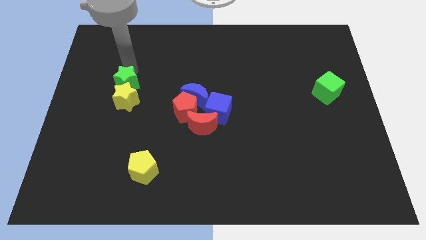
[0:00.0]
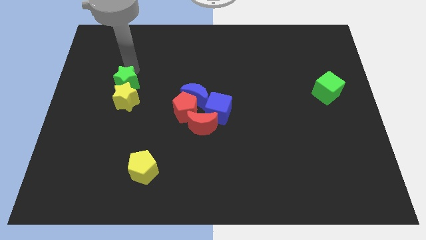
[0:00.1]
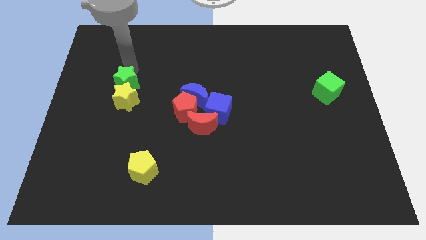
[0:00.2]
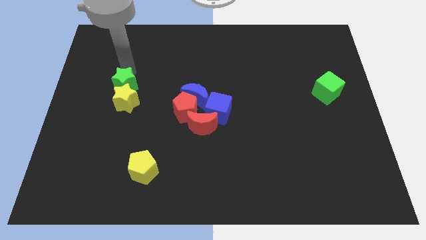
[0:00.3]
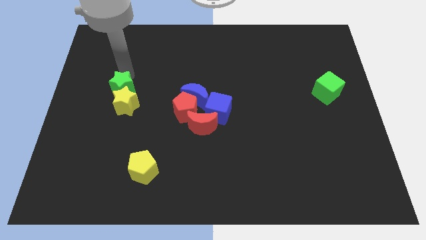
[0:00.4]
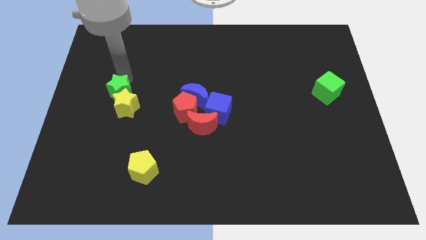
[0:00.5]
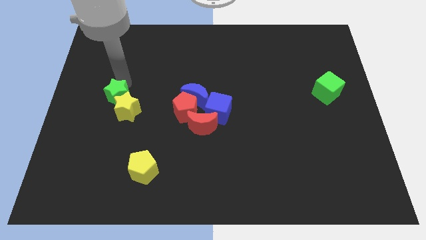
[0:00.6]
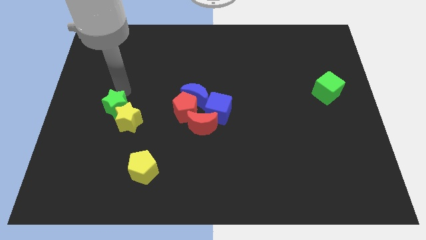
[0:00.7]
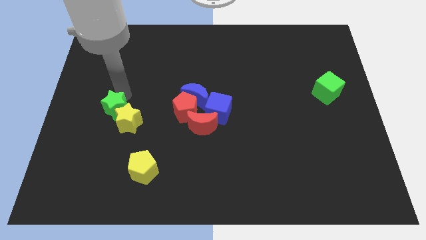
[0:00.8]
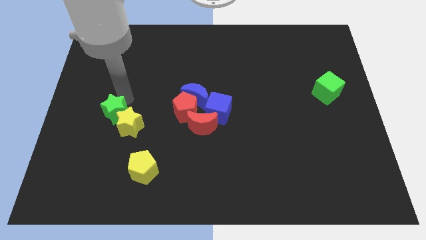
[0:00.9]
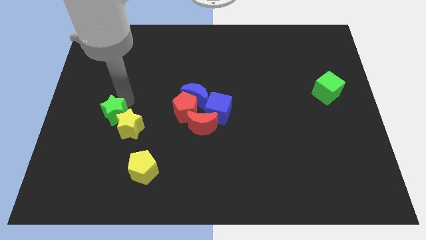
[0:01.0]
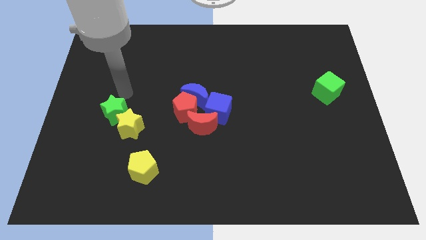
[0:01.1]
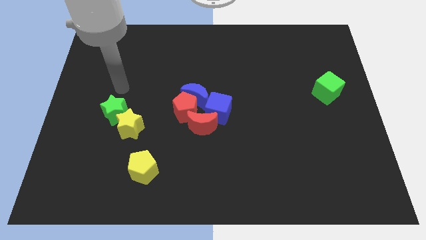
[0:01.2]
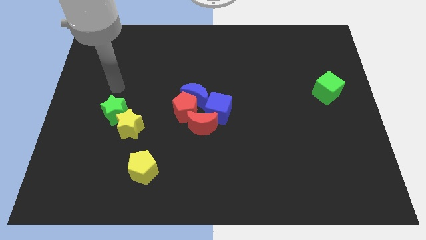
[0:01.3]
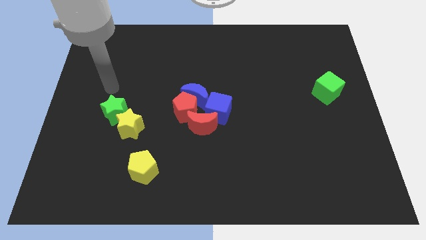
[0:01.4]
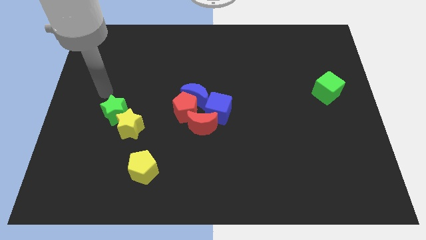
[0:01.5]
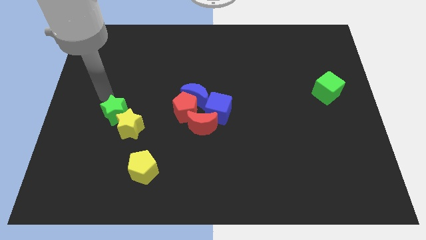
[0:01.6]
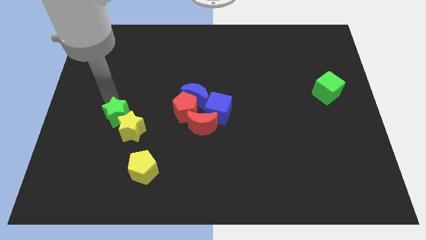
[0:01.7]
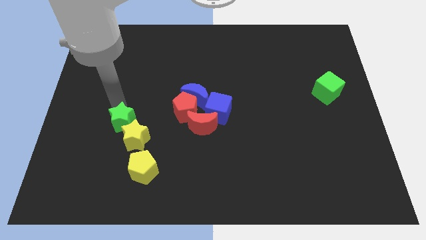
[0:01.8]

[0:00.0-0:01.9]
move the yellow star and green star above the yellow pentagon

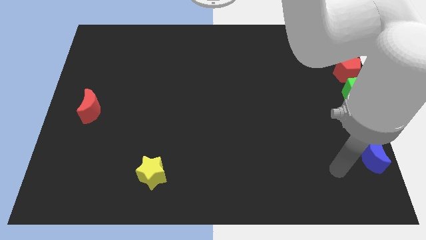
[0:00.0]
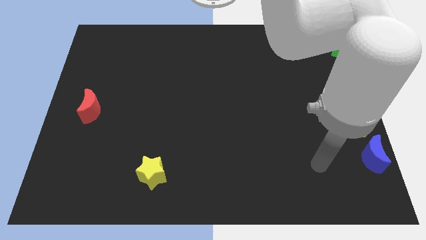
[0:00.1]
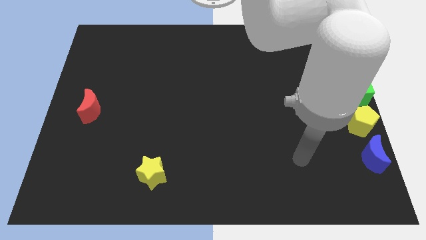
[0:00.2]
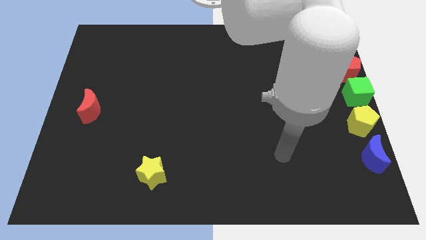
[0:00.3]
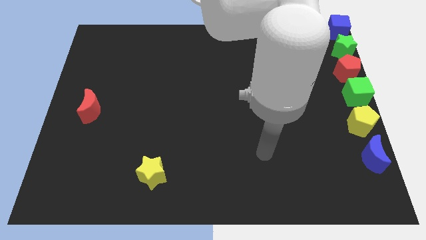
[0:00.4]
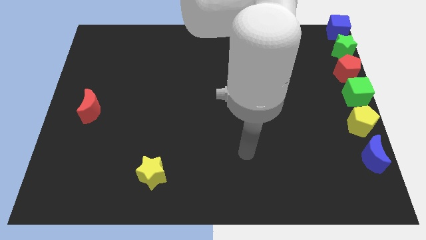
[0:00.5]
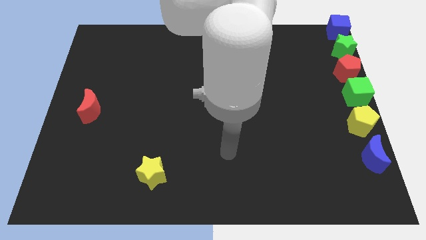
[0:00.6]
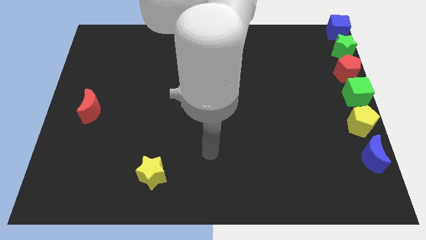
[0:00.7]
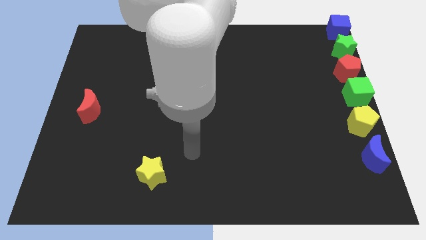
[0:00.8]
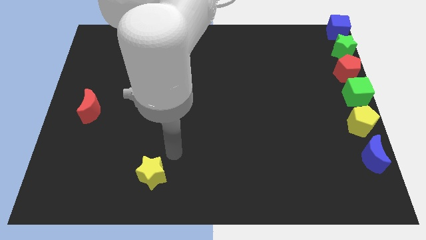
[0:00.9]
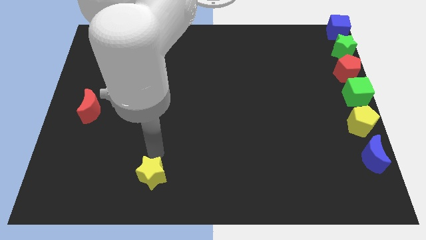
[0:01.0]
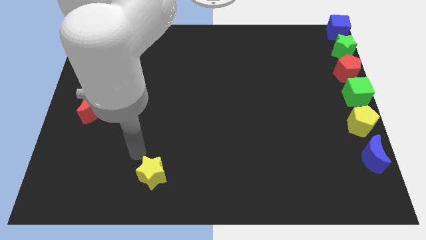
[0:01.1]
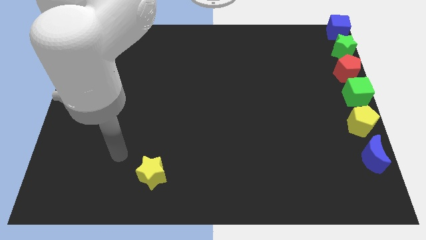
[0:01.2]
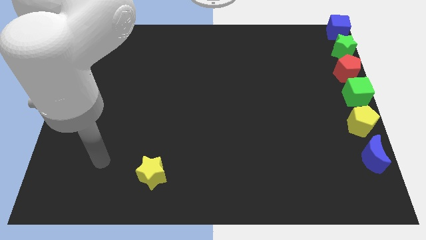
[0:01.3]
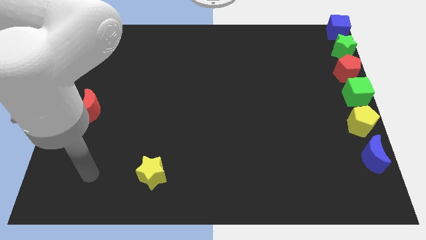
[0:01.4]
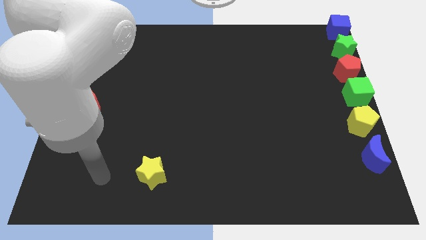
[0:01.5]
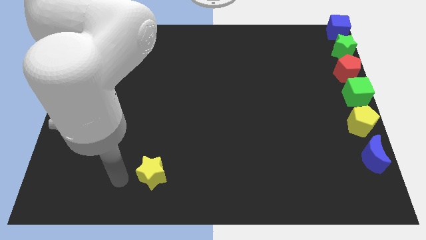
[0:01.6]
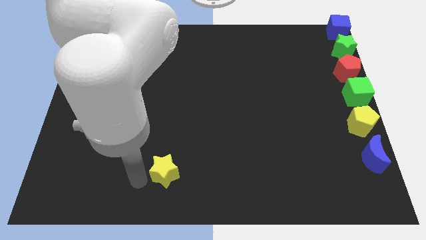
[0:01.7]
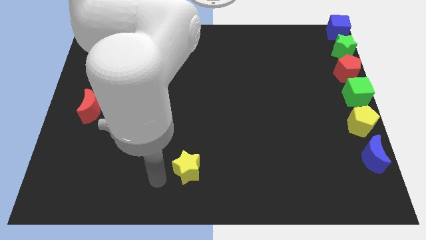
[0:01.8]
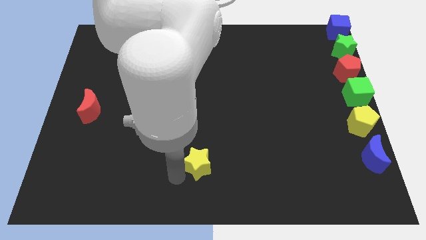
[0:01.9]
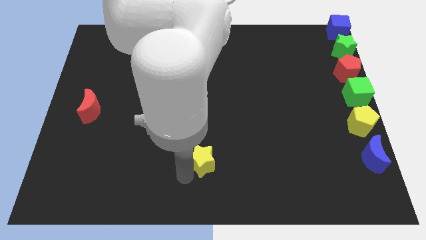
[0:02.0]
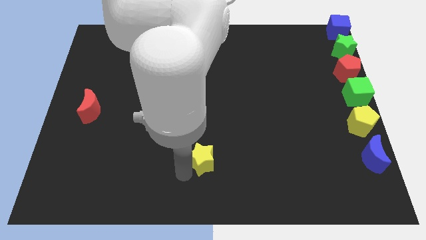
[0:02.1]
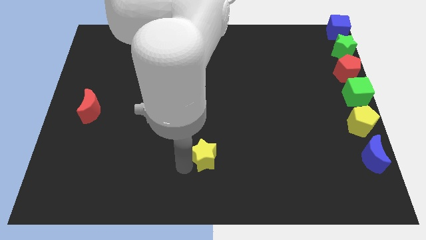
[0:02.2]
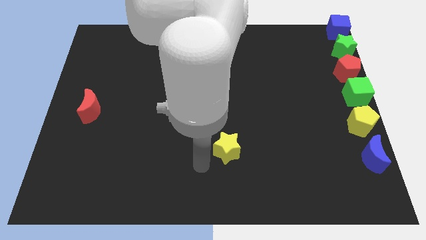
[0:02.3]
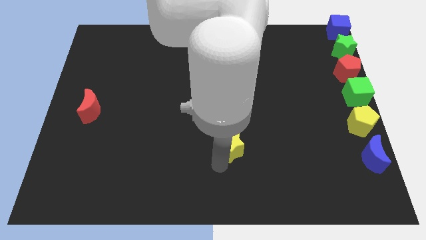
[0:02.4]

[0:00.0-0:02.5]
slide the yellow star left to the blue moon

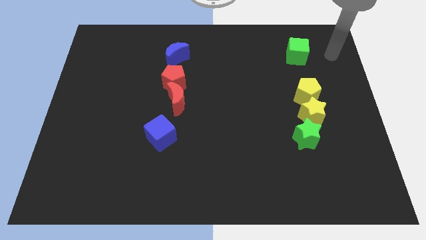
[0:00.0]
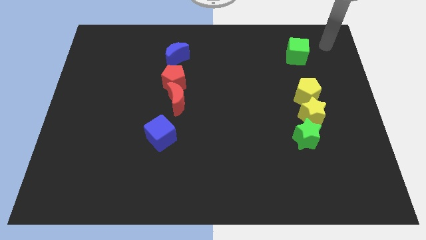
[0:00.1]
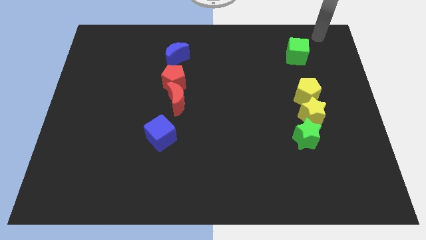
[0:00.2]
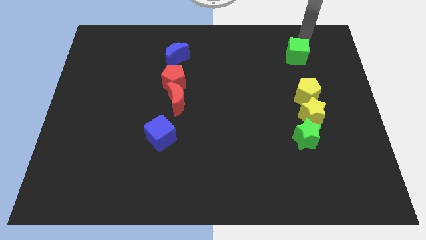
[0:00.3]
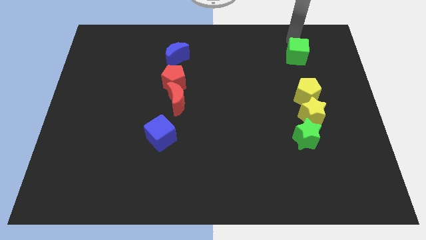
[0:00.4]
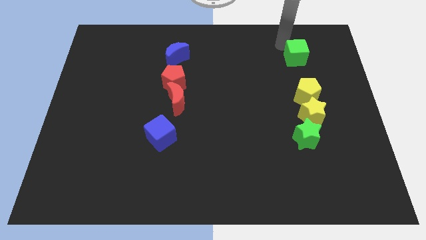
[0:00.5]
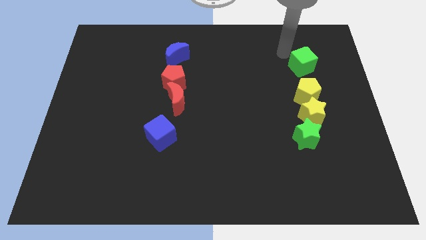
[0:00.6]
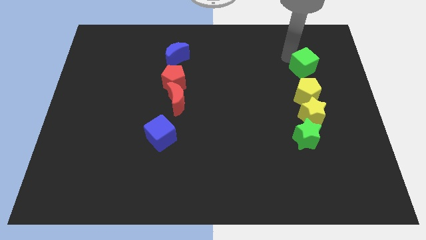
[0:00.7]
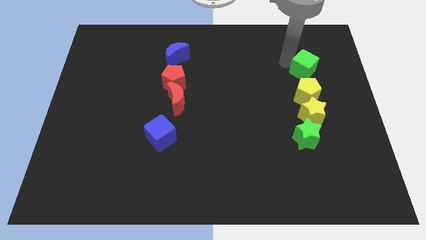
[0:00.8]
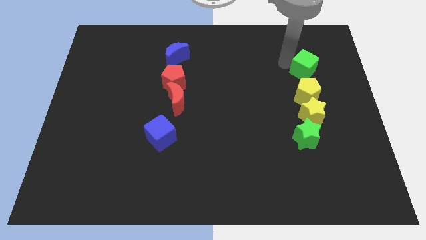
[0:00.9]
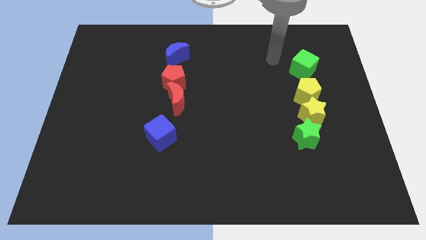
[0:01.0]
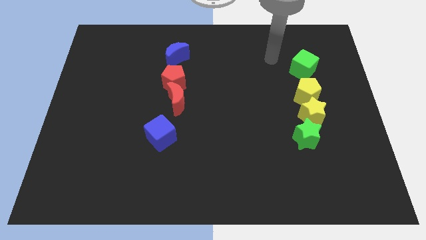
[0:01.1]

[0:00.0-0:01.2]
slightly move green cube to form a vertical line

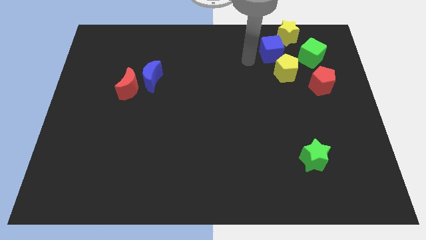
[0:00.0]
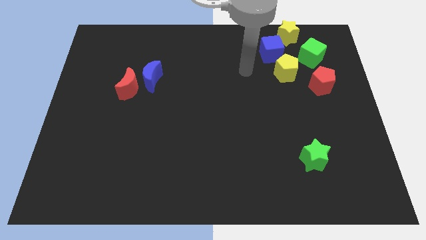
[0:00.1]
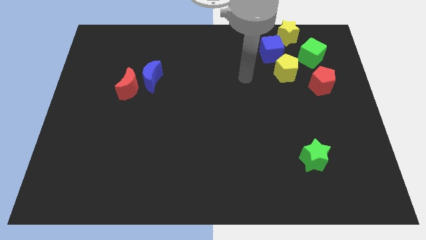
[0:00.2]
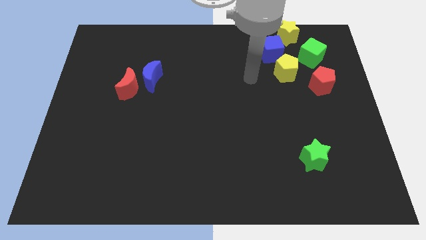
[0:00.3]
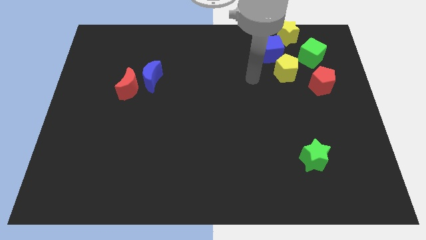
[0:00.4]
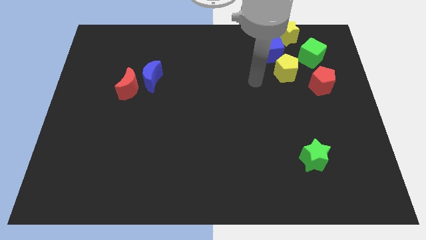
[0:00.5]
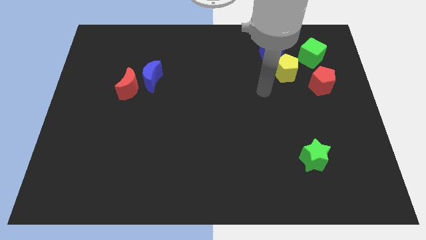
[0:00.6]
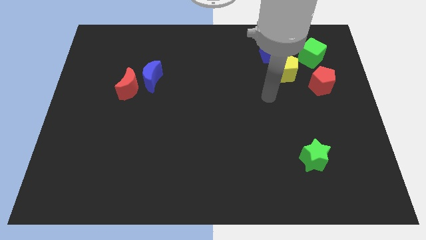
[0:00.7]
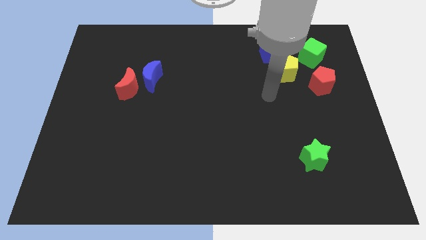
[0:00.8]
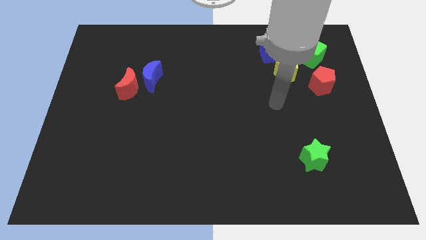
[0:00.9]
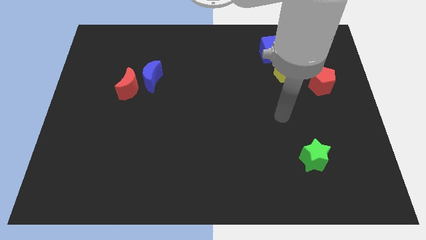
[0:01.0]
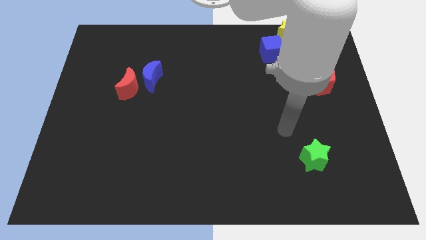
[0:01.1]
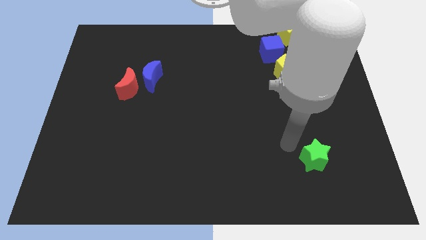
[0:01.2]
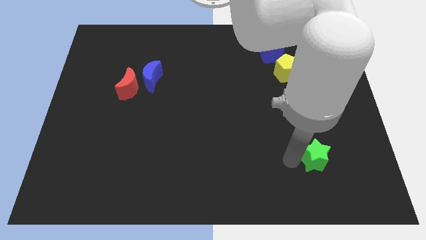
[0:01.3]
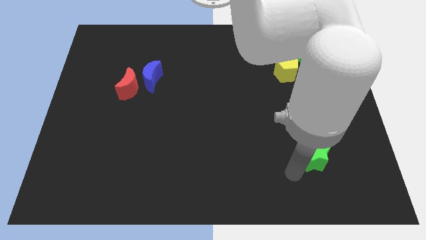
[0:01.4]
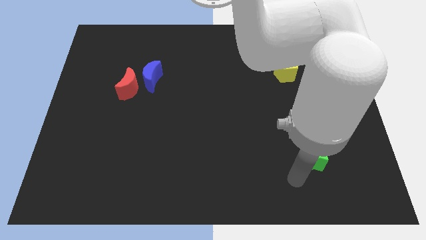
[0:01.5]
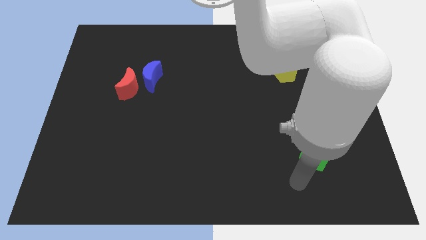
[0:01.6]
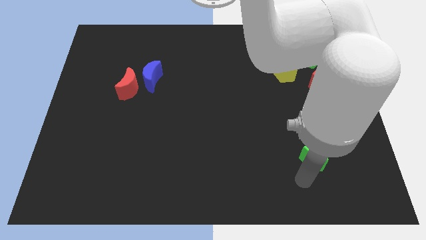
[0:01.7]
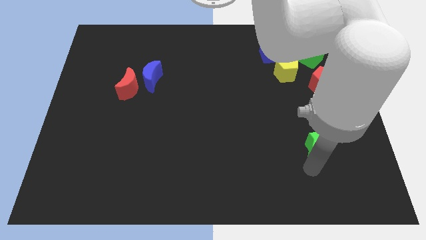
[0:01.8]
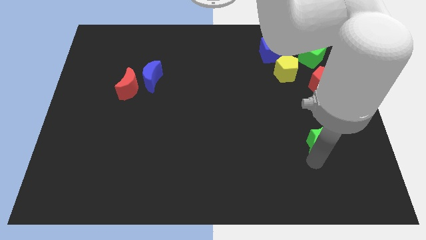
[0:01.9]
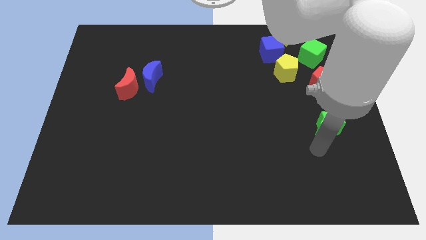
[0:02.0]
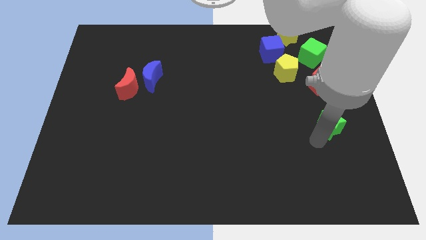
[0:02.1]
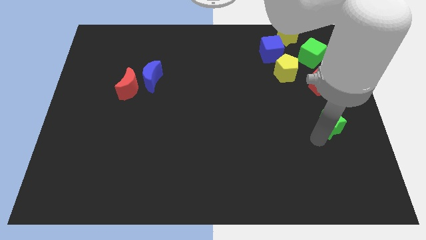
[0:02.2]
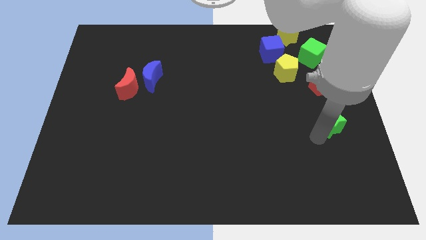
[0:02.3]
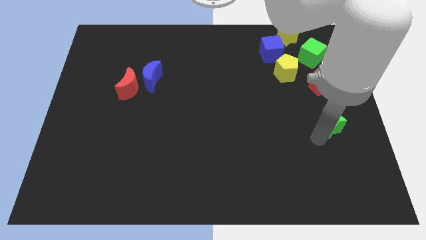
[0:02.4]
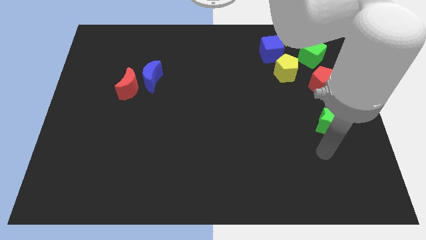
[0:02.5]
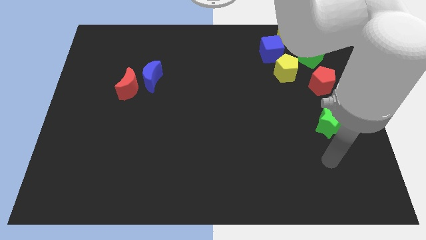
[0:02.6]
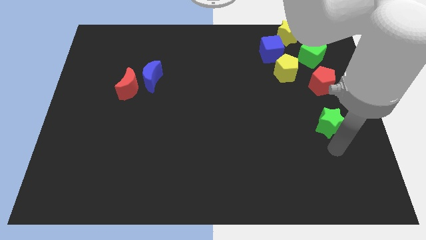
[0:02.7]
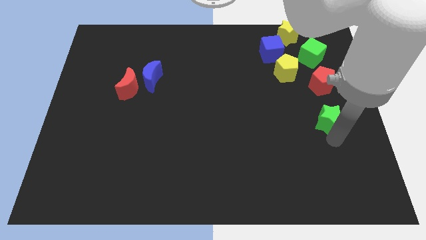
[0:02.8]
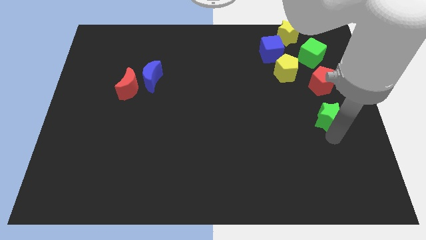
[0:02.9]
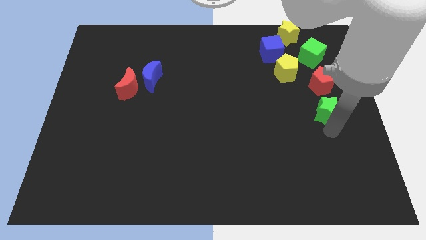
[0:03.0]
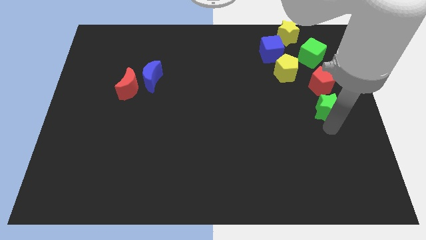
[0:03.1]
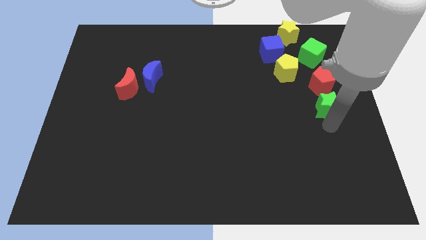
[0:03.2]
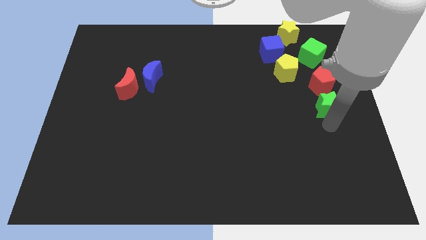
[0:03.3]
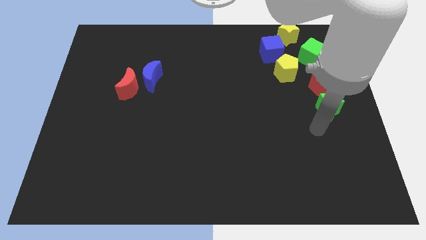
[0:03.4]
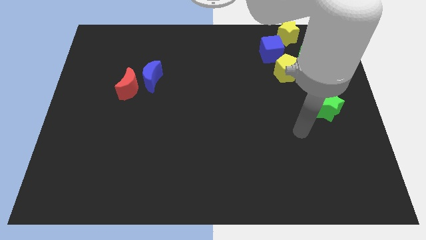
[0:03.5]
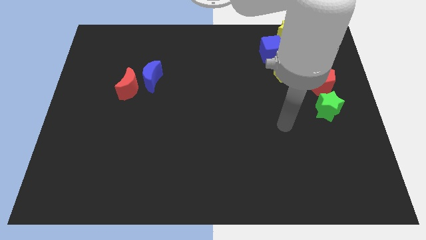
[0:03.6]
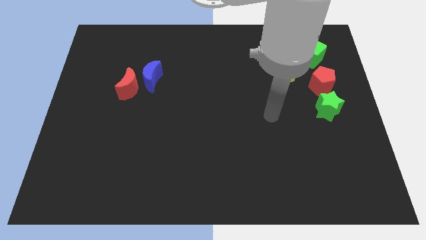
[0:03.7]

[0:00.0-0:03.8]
take the green star close to the bottom side of the red pentagon
